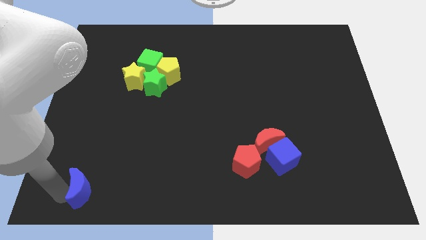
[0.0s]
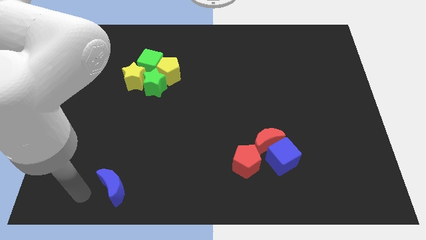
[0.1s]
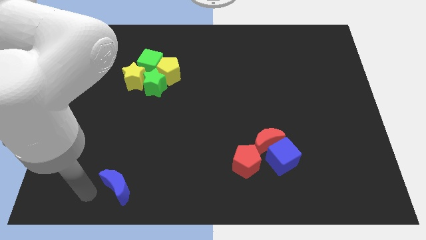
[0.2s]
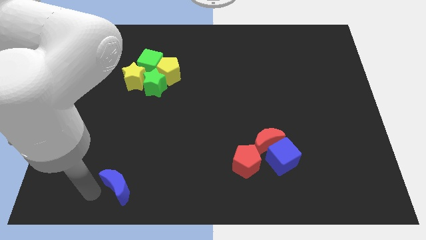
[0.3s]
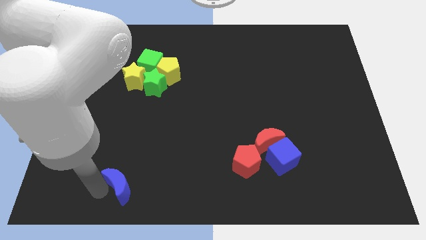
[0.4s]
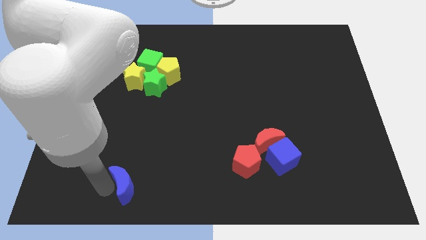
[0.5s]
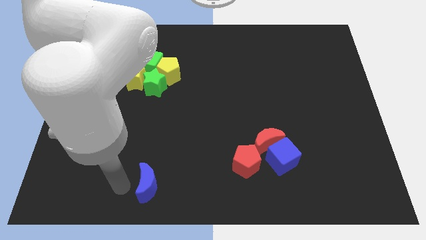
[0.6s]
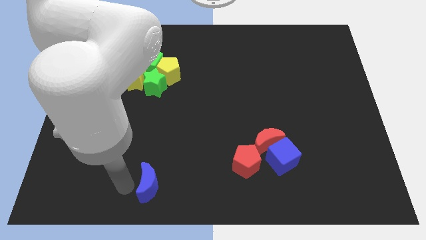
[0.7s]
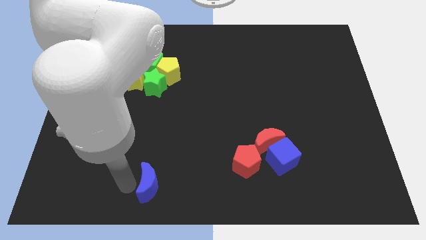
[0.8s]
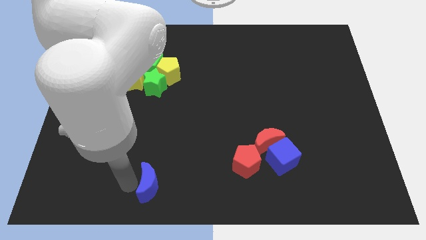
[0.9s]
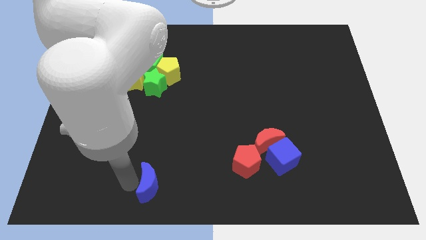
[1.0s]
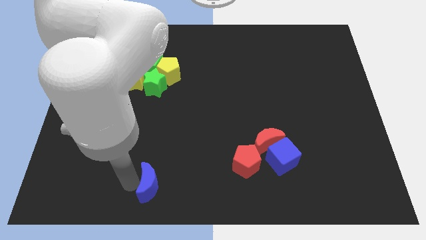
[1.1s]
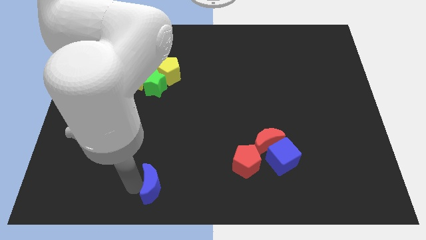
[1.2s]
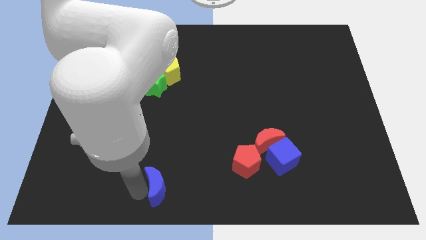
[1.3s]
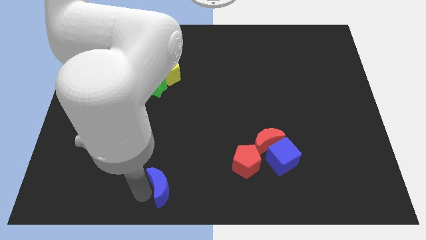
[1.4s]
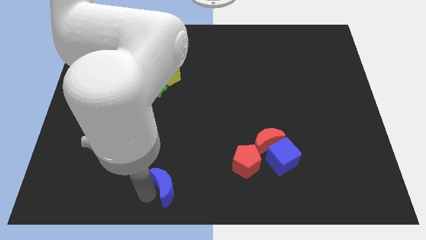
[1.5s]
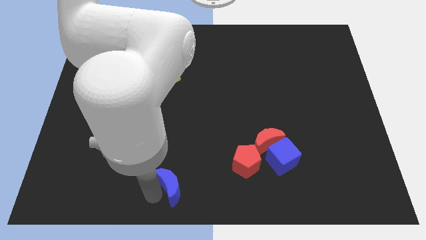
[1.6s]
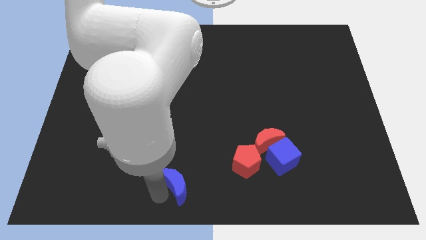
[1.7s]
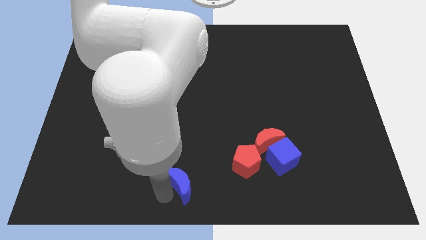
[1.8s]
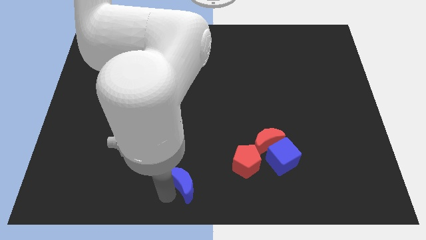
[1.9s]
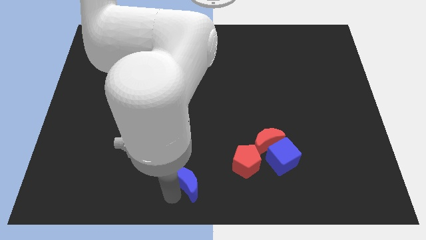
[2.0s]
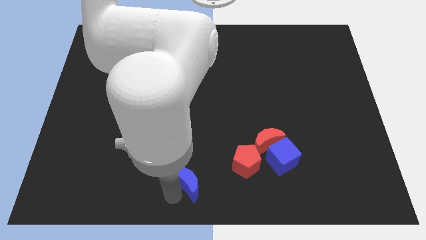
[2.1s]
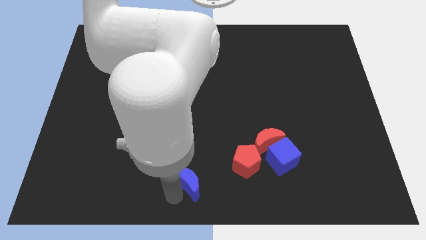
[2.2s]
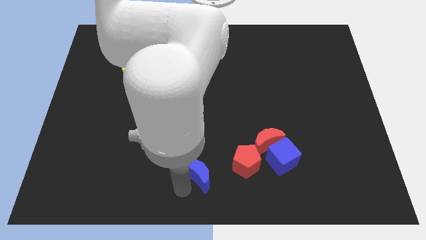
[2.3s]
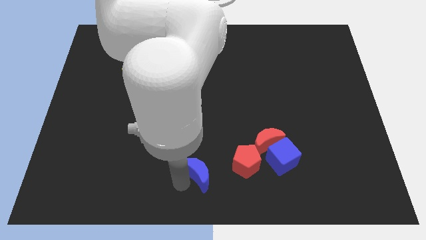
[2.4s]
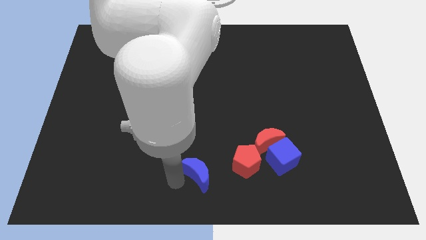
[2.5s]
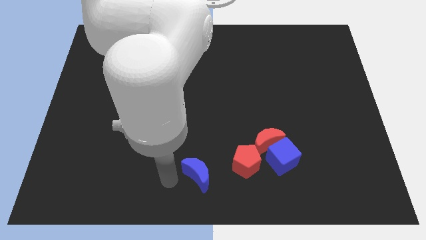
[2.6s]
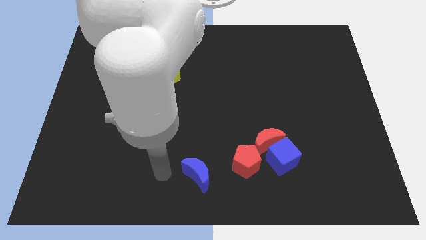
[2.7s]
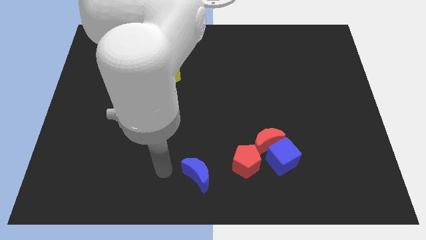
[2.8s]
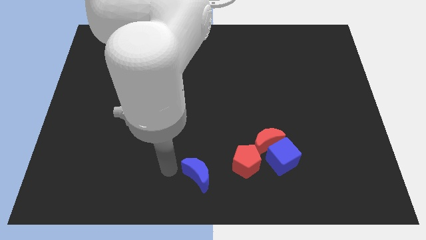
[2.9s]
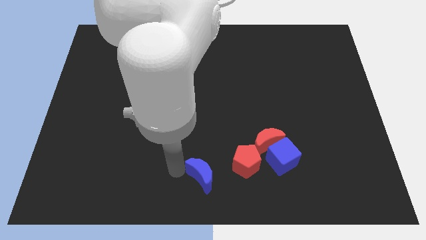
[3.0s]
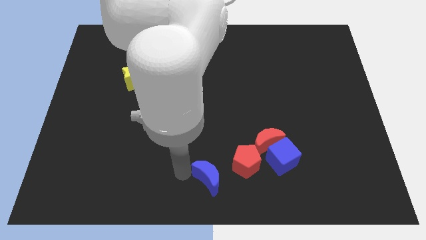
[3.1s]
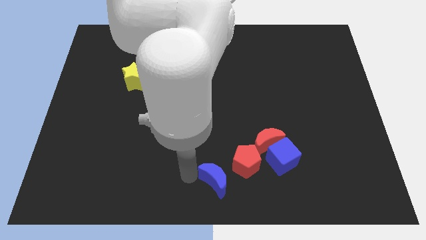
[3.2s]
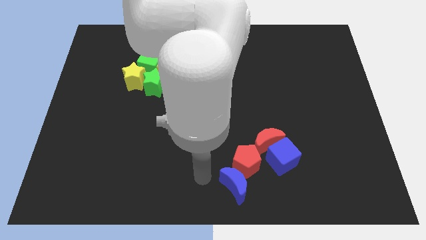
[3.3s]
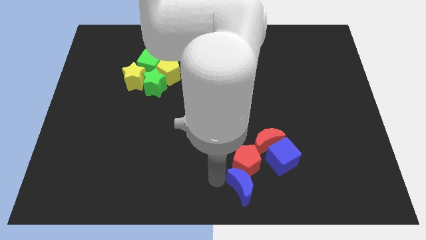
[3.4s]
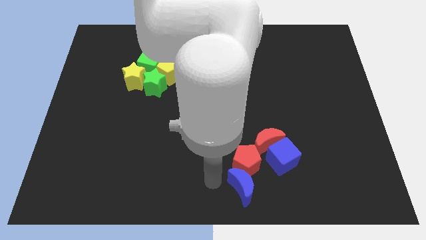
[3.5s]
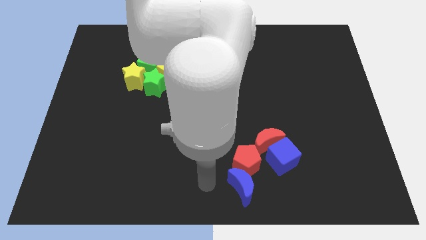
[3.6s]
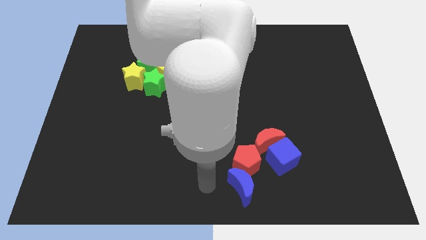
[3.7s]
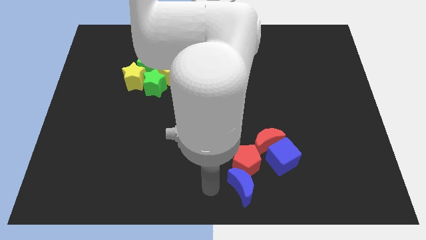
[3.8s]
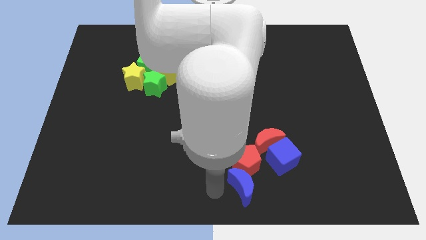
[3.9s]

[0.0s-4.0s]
move the blue moon to the bottom of the red pentagon

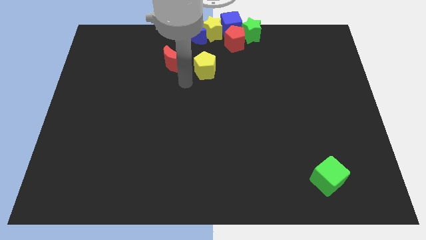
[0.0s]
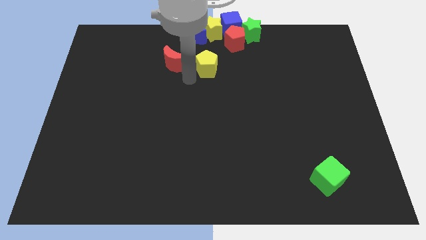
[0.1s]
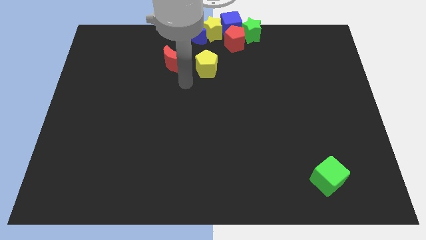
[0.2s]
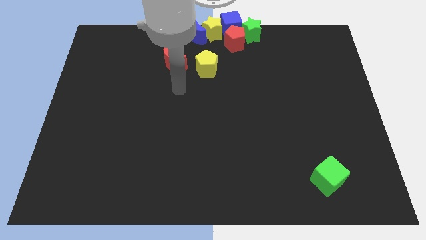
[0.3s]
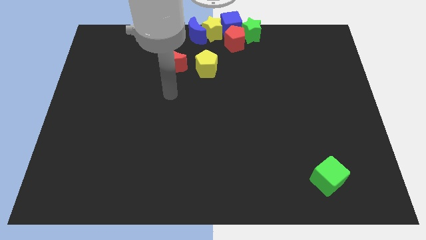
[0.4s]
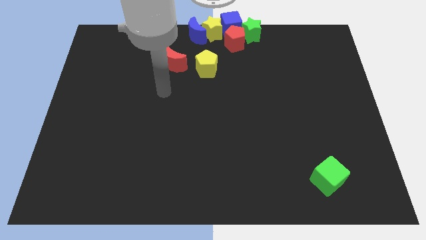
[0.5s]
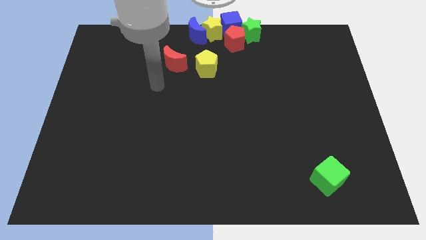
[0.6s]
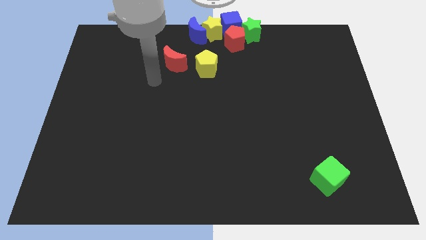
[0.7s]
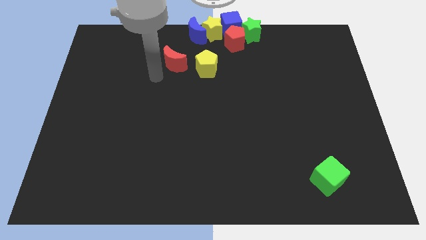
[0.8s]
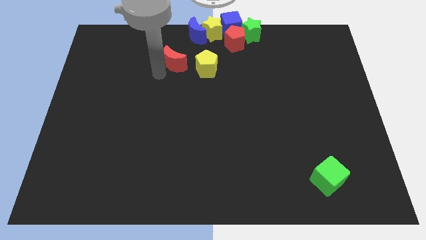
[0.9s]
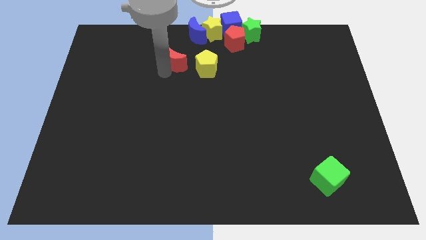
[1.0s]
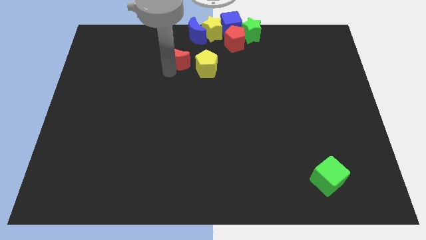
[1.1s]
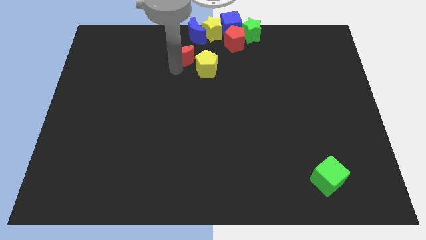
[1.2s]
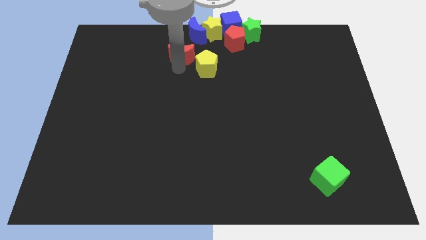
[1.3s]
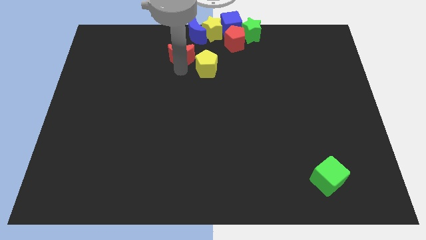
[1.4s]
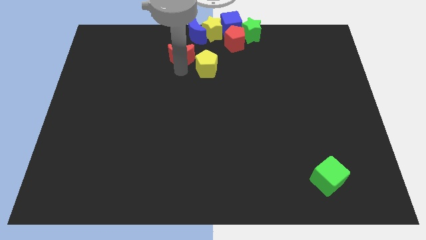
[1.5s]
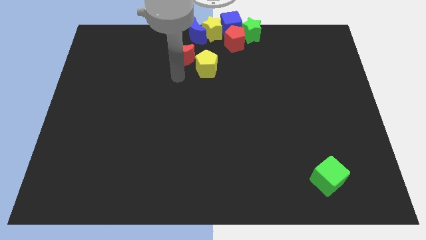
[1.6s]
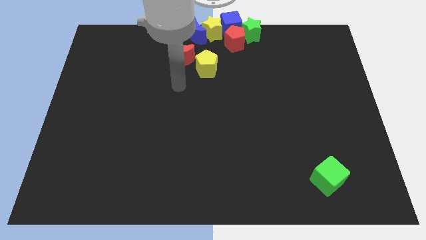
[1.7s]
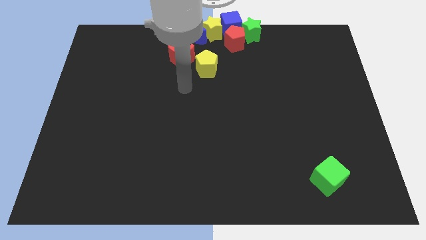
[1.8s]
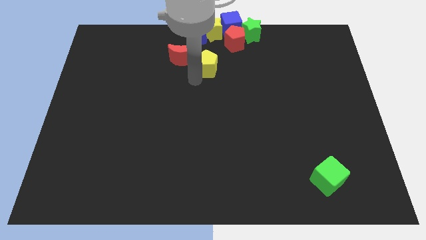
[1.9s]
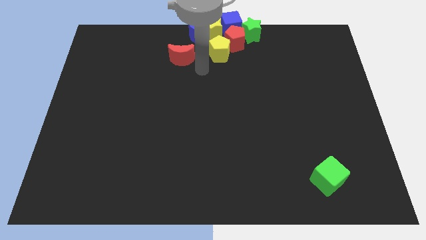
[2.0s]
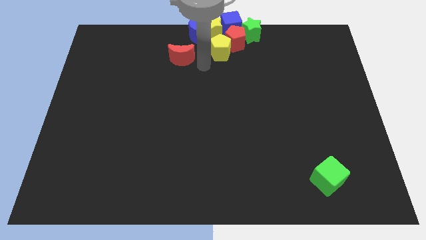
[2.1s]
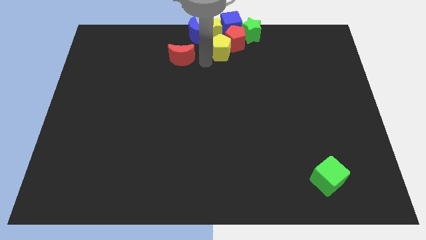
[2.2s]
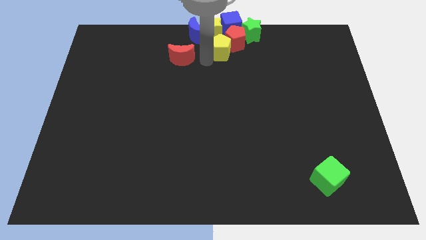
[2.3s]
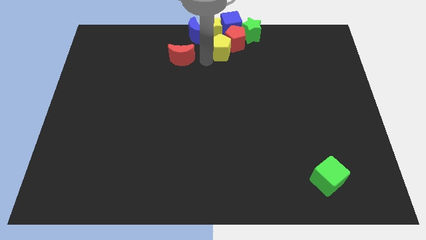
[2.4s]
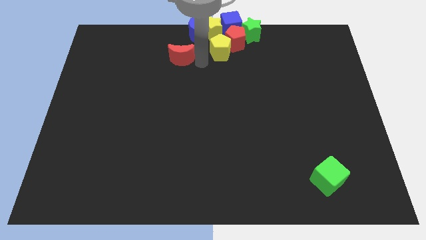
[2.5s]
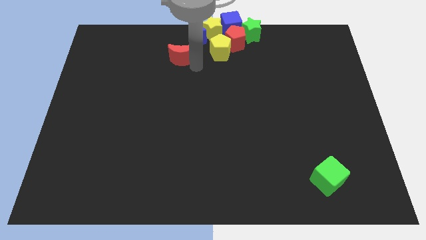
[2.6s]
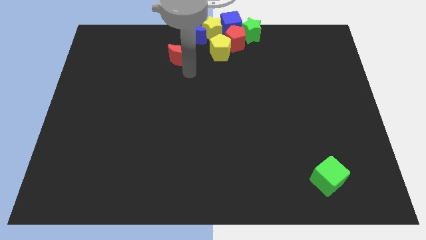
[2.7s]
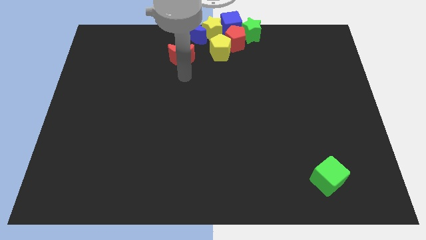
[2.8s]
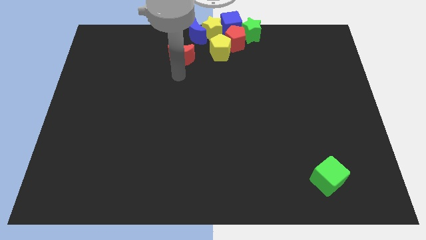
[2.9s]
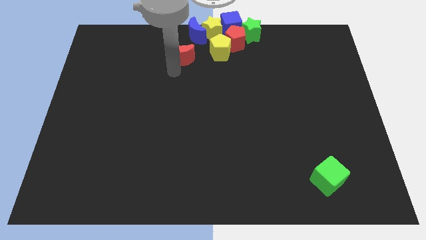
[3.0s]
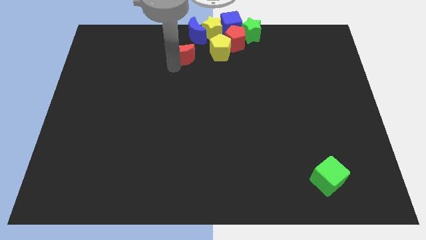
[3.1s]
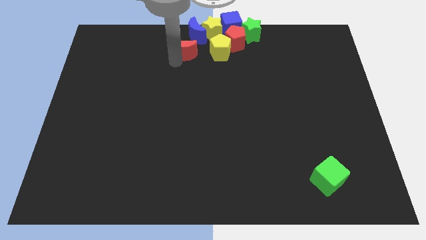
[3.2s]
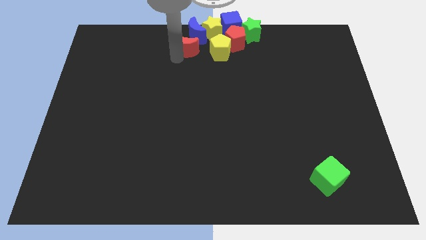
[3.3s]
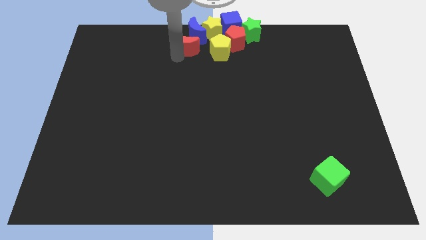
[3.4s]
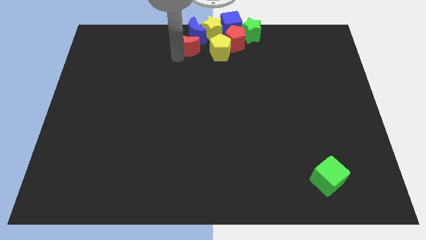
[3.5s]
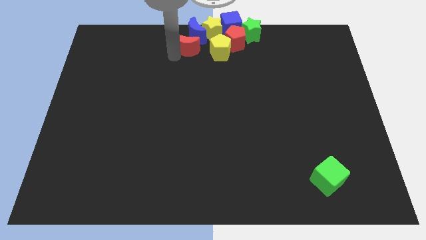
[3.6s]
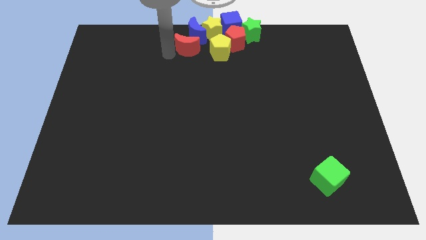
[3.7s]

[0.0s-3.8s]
push the yellow pentagon and red crescent into the group of blocks

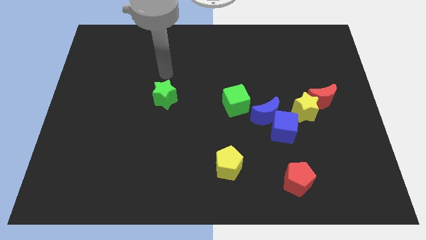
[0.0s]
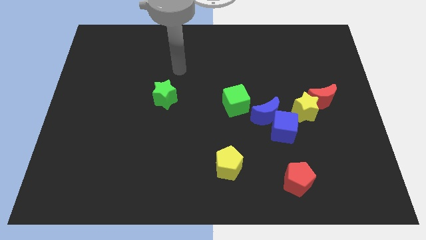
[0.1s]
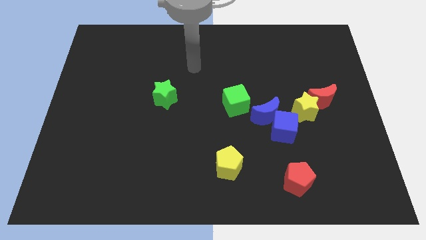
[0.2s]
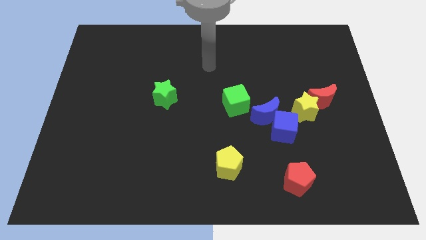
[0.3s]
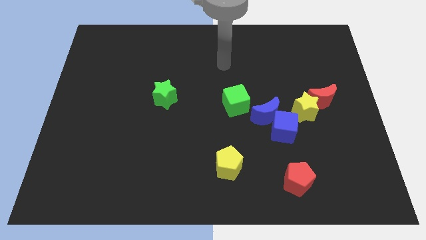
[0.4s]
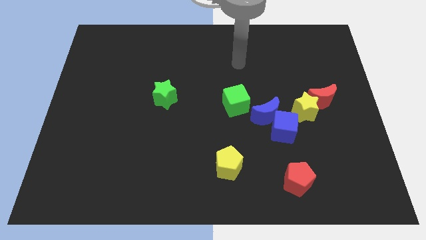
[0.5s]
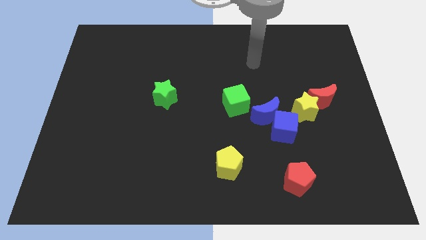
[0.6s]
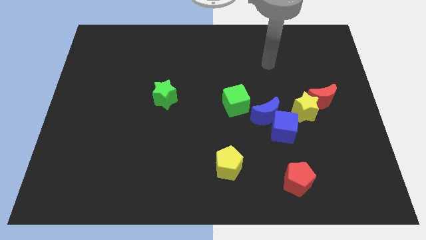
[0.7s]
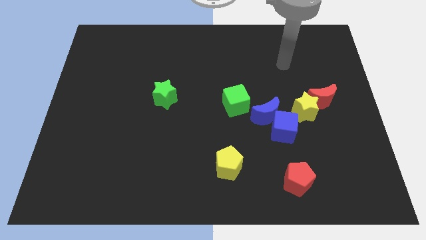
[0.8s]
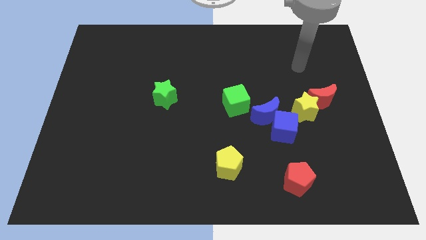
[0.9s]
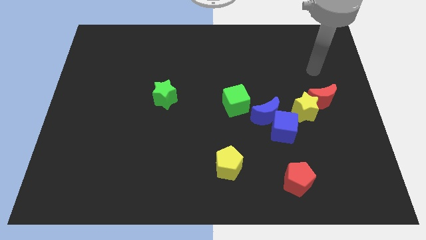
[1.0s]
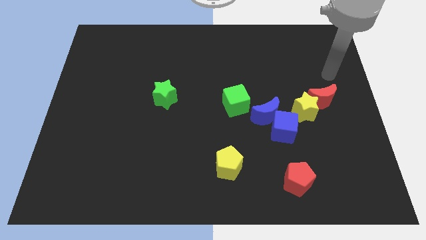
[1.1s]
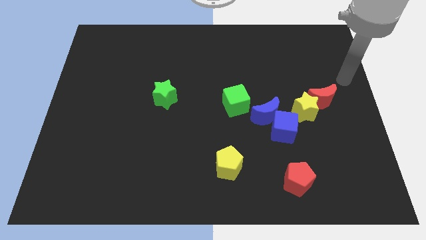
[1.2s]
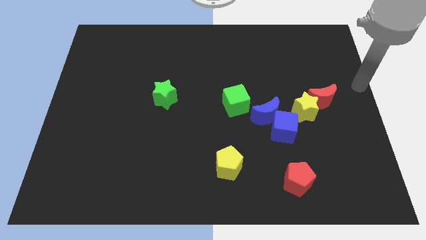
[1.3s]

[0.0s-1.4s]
point your hand at the top right side of the red moon
